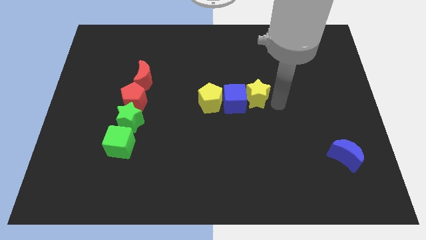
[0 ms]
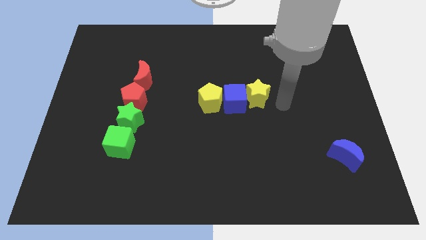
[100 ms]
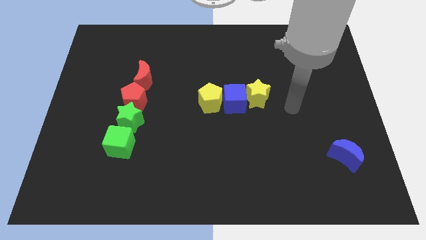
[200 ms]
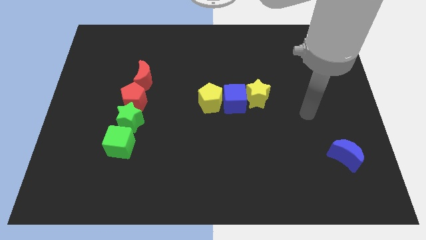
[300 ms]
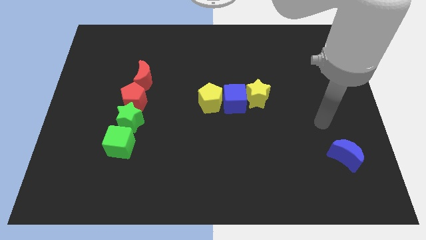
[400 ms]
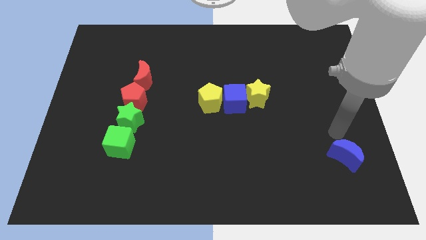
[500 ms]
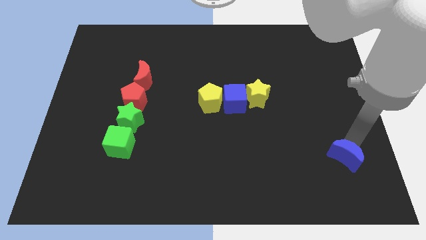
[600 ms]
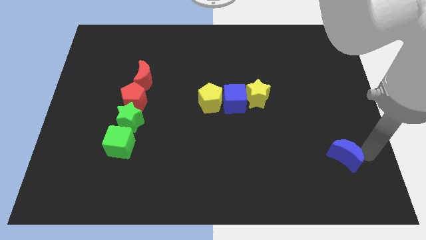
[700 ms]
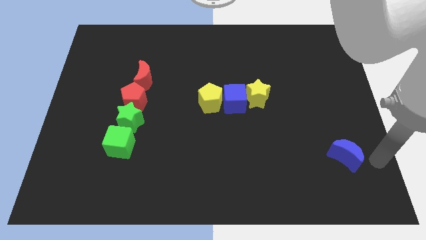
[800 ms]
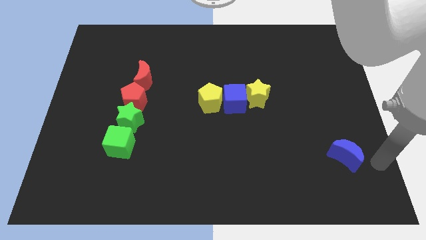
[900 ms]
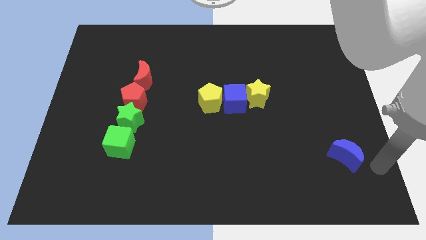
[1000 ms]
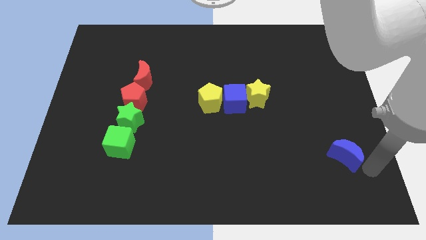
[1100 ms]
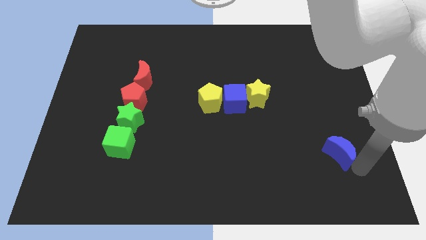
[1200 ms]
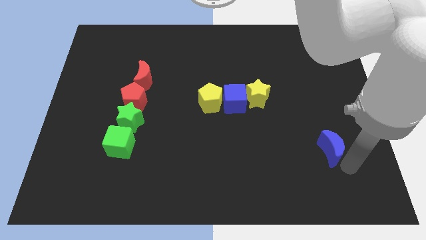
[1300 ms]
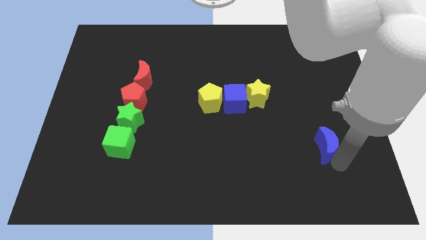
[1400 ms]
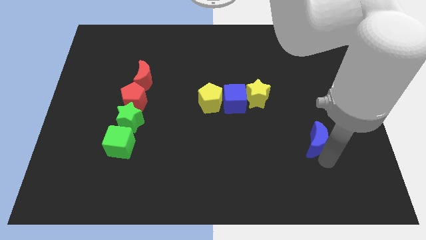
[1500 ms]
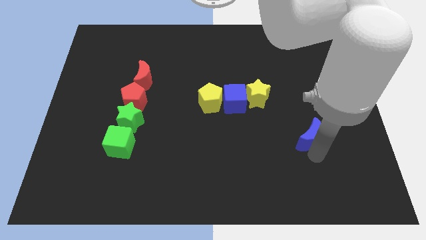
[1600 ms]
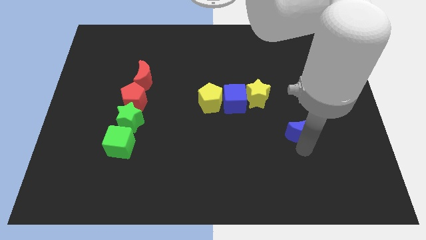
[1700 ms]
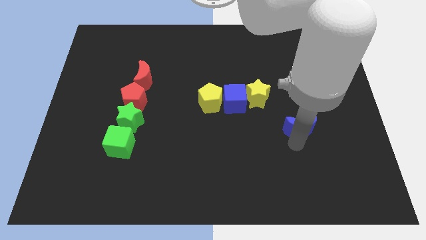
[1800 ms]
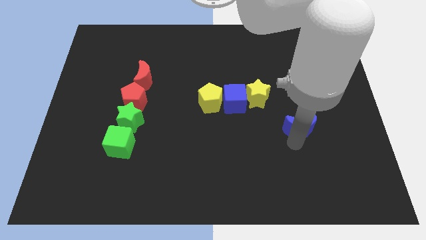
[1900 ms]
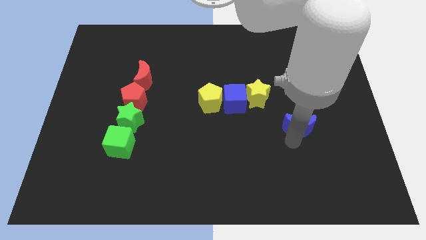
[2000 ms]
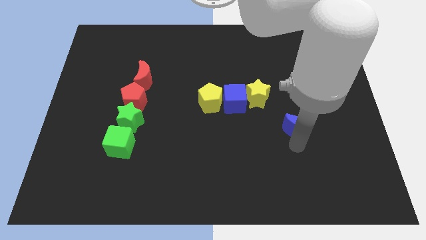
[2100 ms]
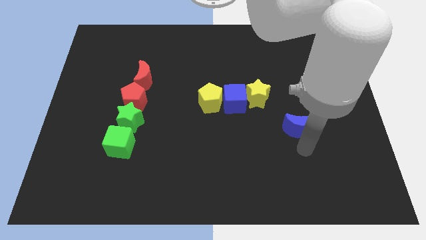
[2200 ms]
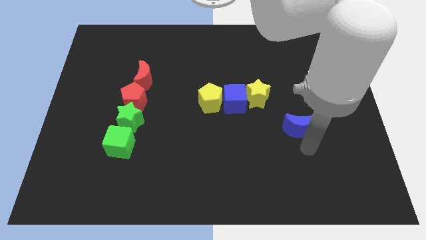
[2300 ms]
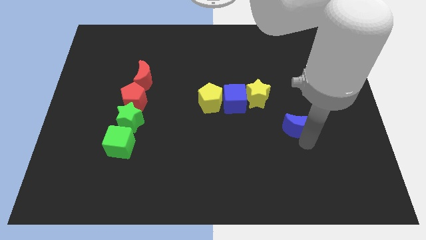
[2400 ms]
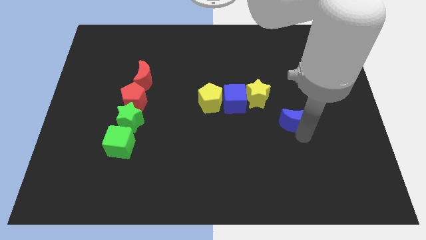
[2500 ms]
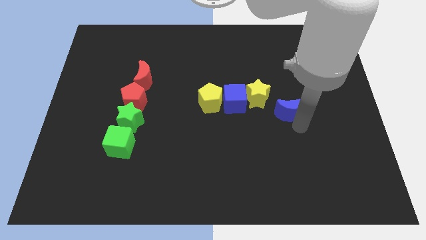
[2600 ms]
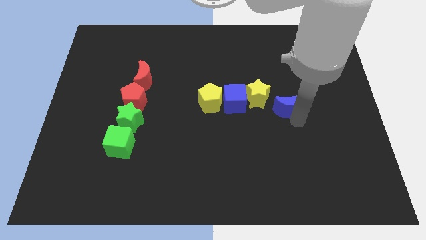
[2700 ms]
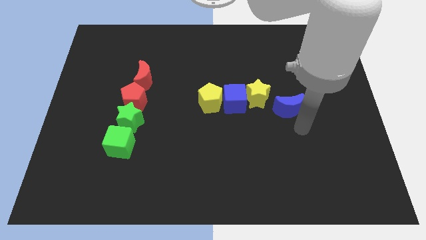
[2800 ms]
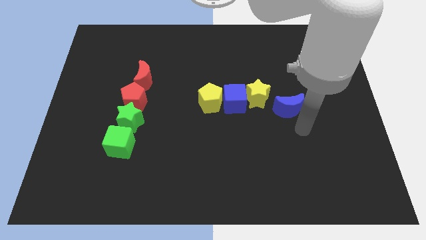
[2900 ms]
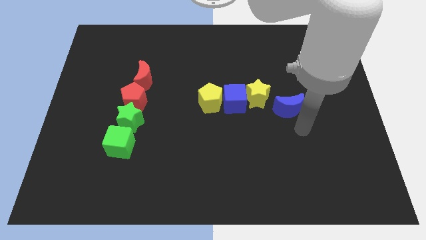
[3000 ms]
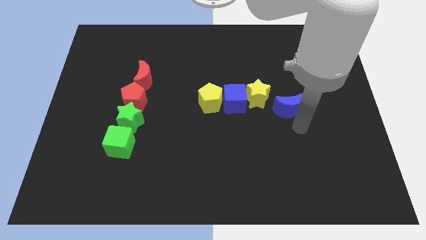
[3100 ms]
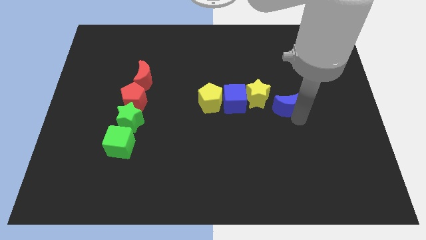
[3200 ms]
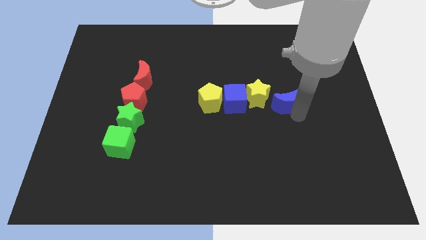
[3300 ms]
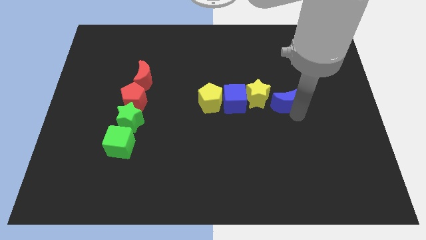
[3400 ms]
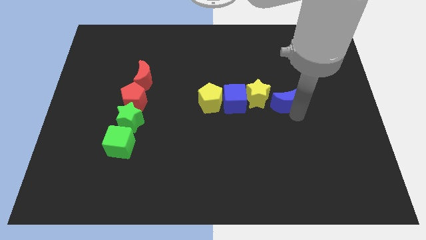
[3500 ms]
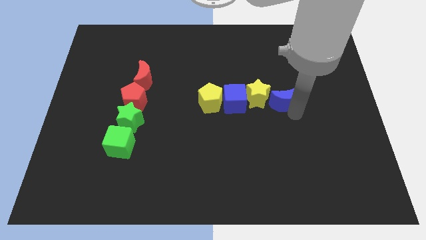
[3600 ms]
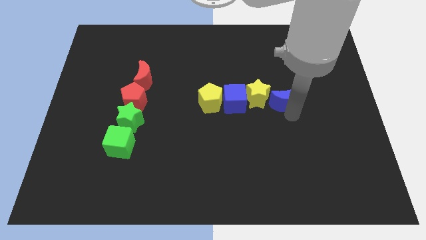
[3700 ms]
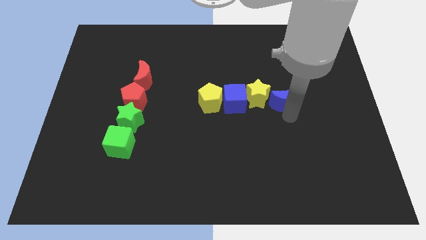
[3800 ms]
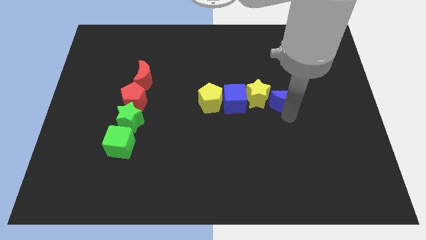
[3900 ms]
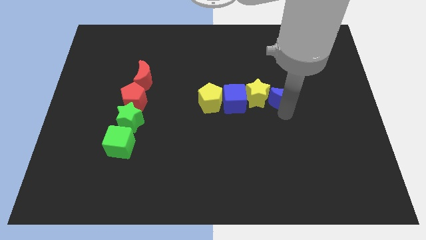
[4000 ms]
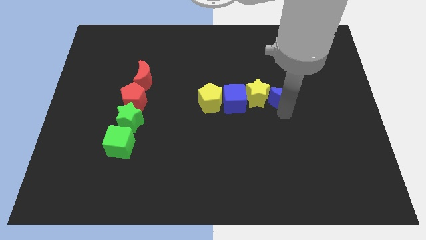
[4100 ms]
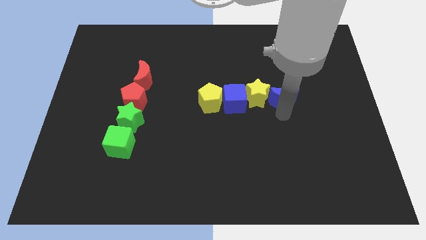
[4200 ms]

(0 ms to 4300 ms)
push the blue crescent to the right side of the yellow star

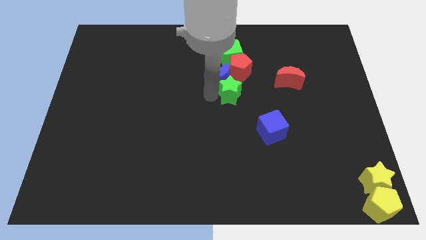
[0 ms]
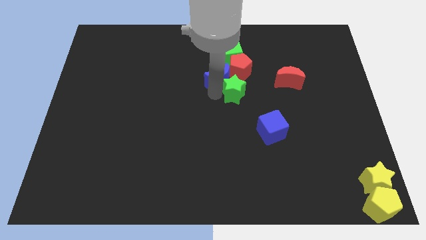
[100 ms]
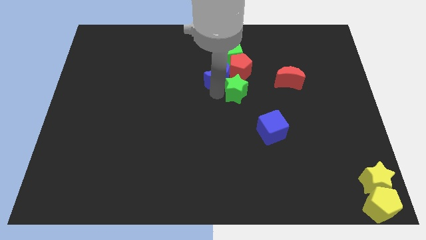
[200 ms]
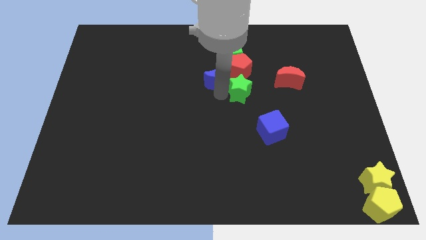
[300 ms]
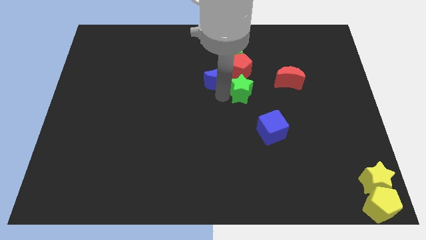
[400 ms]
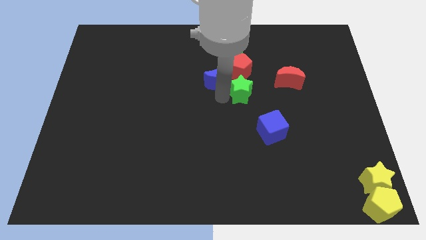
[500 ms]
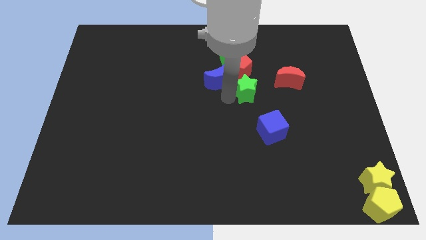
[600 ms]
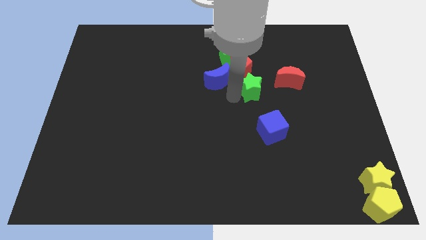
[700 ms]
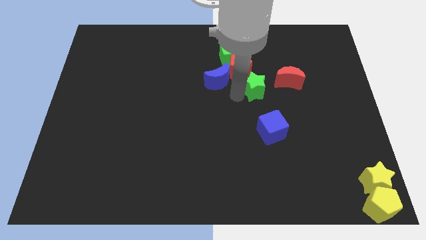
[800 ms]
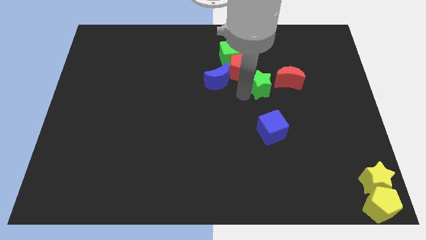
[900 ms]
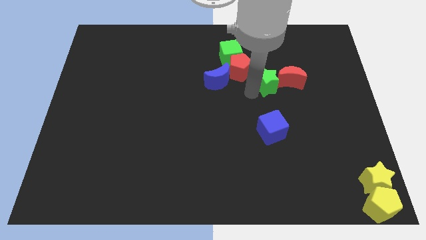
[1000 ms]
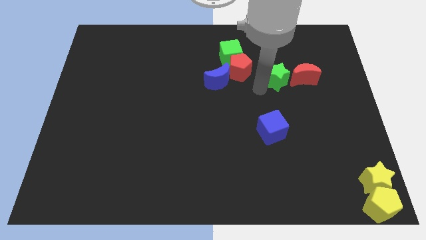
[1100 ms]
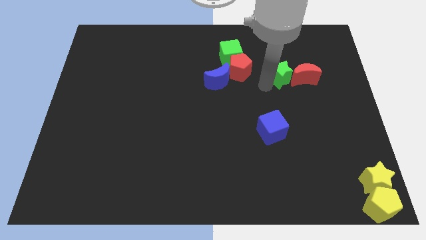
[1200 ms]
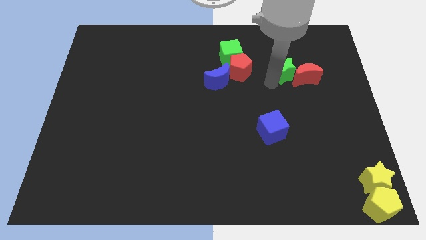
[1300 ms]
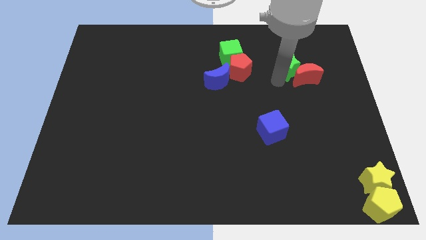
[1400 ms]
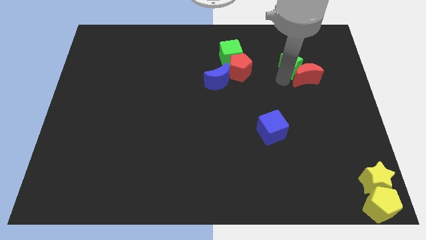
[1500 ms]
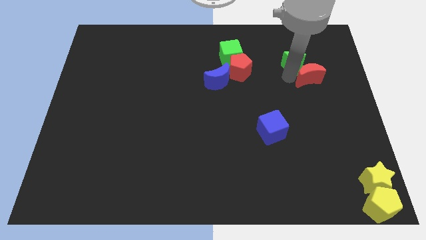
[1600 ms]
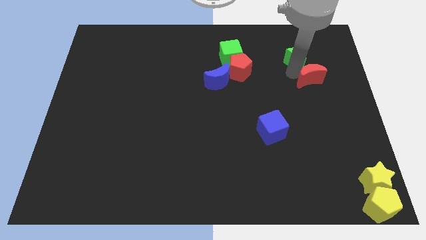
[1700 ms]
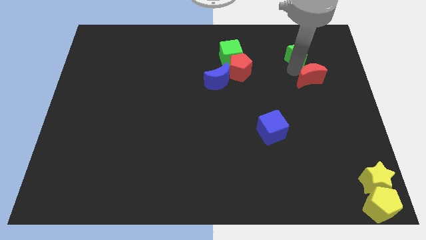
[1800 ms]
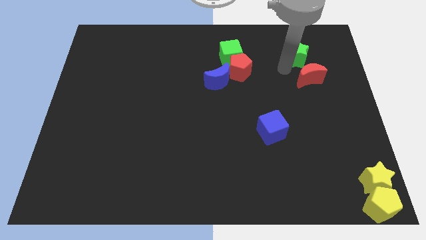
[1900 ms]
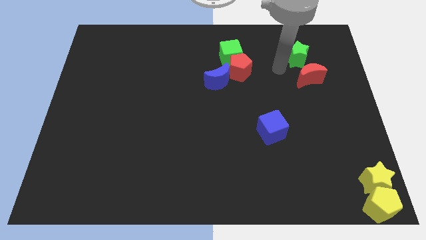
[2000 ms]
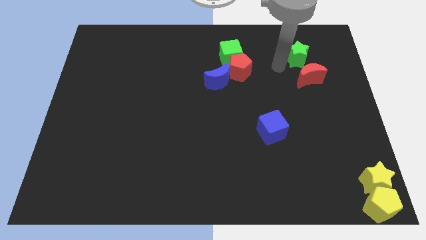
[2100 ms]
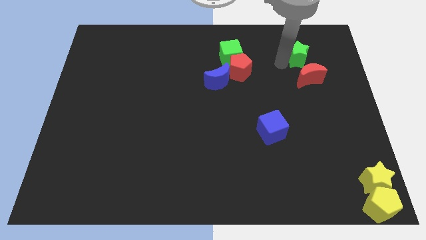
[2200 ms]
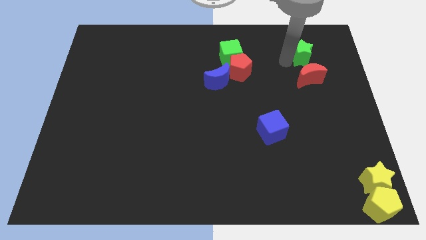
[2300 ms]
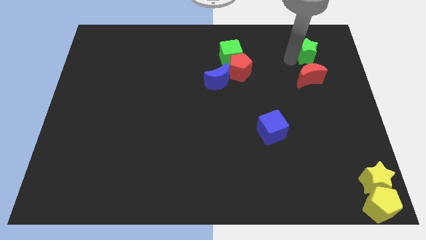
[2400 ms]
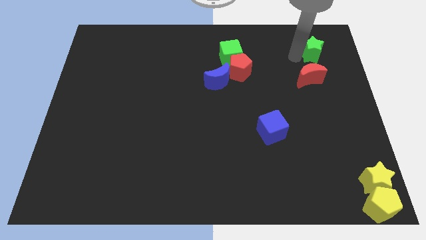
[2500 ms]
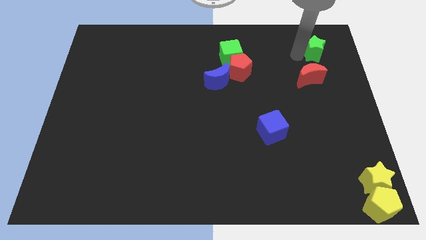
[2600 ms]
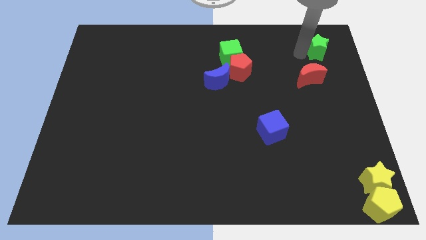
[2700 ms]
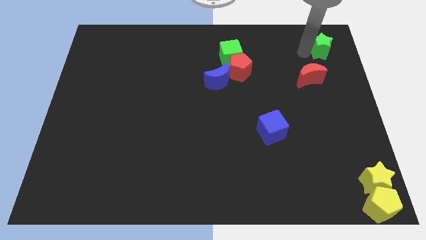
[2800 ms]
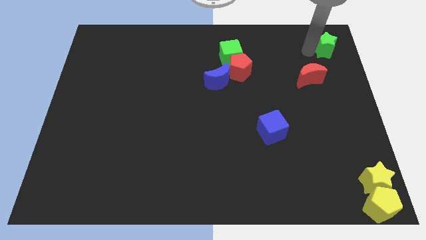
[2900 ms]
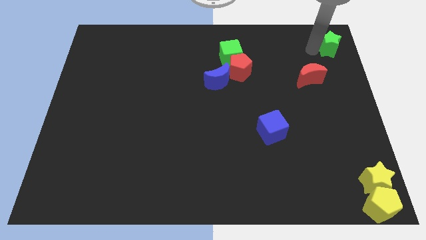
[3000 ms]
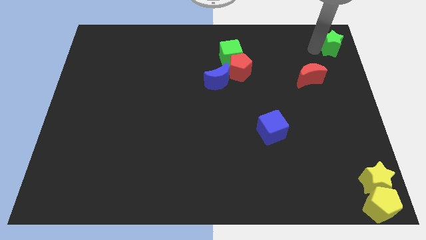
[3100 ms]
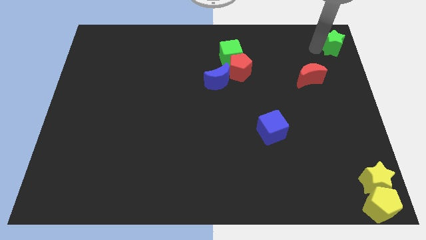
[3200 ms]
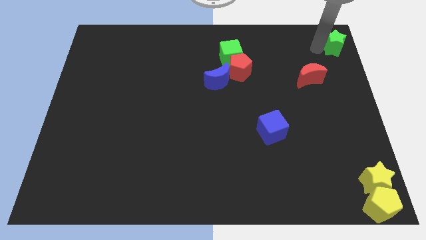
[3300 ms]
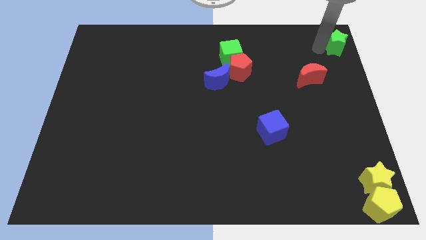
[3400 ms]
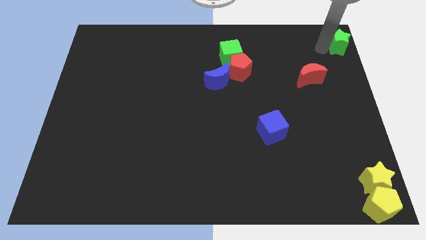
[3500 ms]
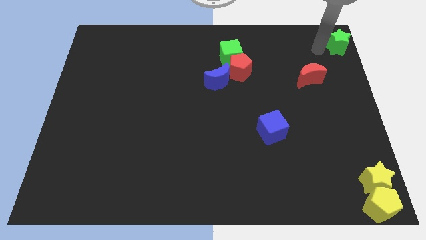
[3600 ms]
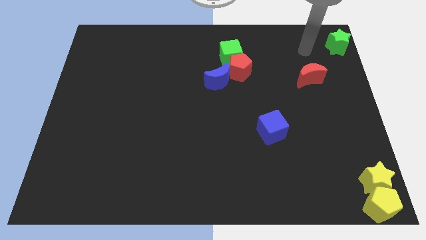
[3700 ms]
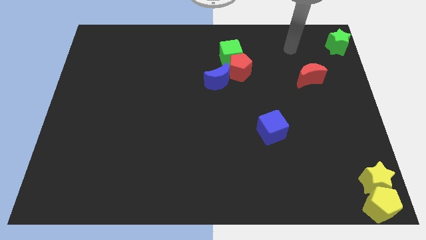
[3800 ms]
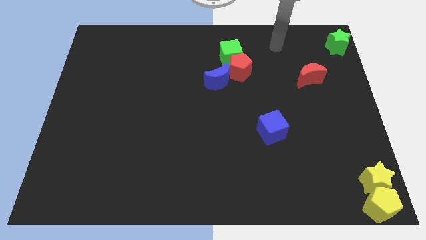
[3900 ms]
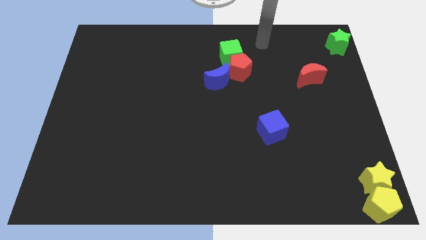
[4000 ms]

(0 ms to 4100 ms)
move the green star to the top right

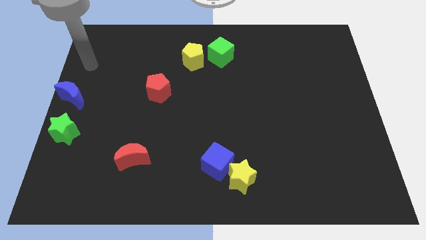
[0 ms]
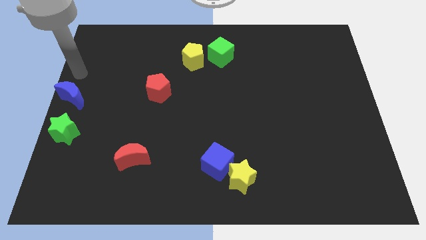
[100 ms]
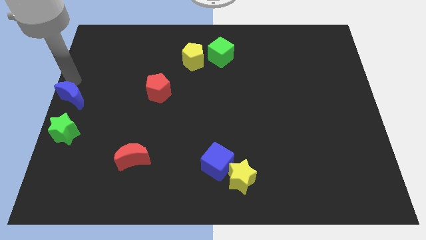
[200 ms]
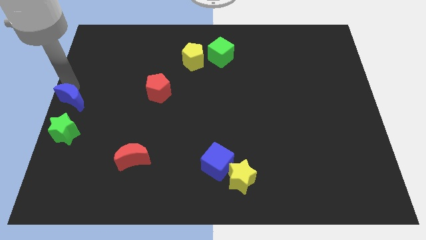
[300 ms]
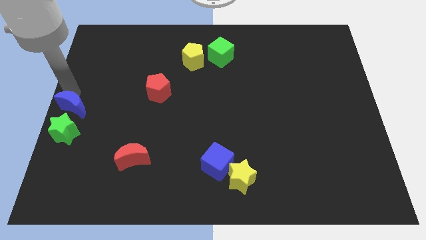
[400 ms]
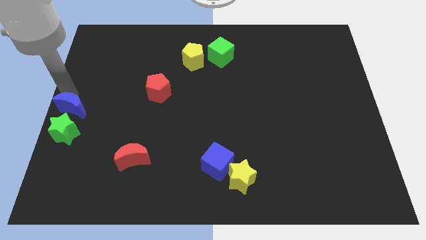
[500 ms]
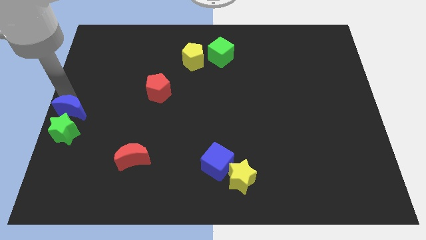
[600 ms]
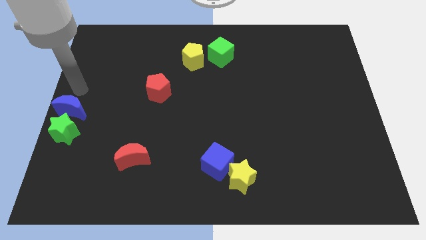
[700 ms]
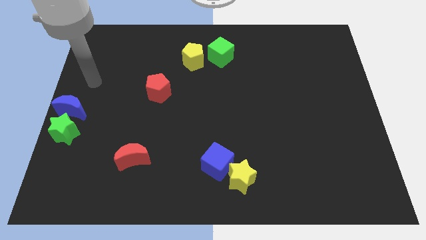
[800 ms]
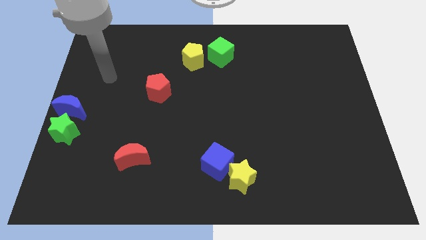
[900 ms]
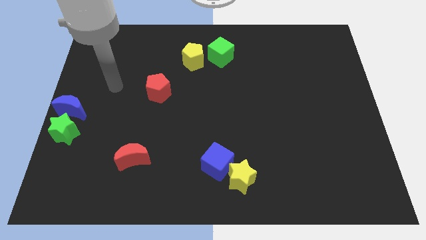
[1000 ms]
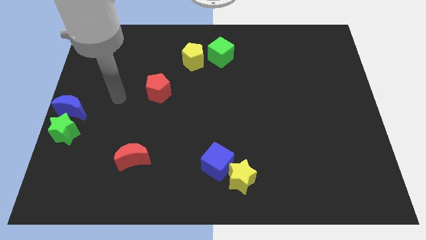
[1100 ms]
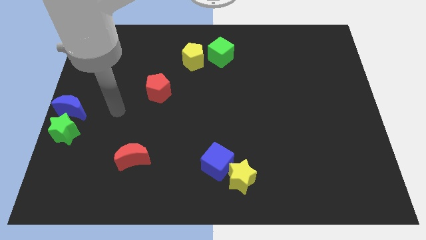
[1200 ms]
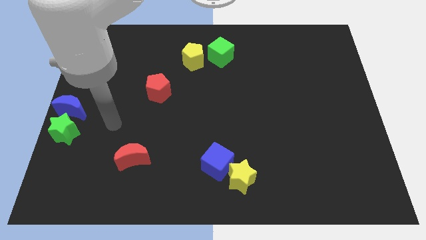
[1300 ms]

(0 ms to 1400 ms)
push blue moon into green star
